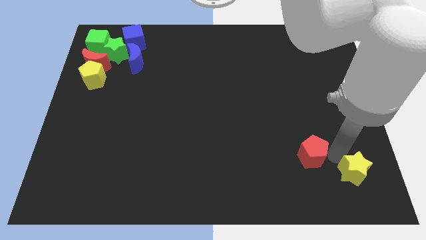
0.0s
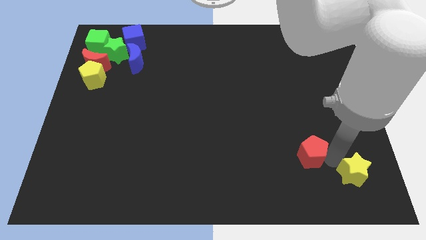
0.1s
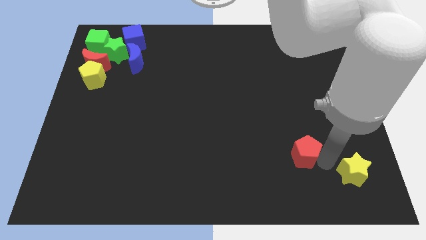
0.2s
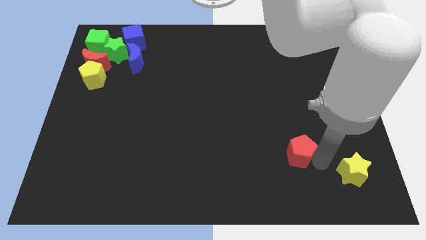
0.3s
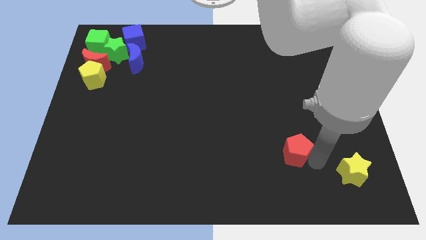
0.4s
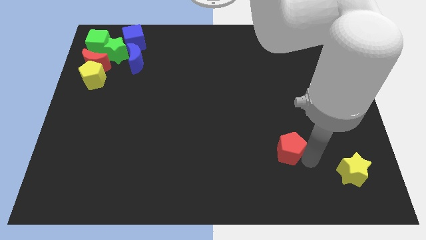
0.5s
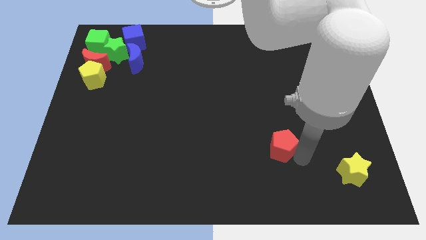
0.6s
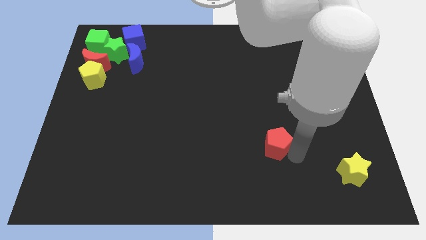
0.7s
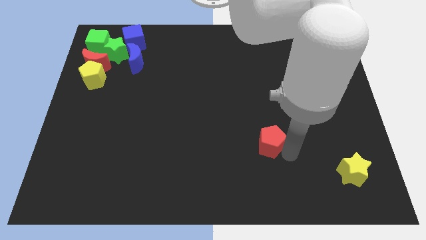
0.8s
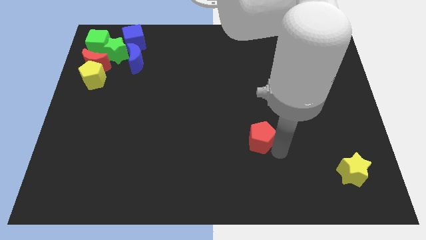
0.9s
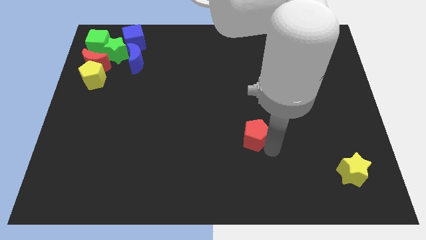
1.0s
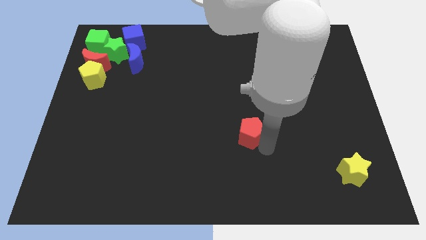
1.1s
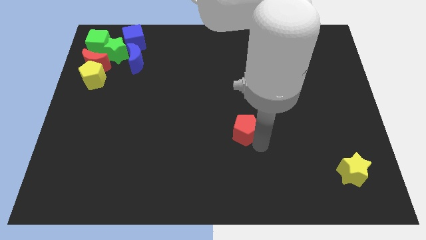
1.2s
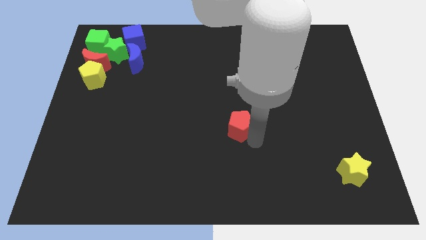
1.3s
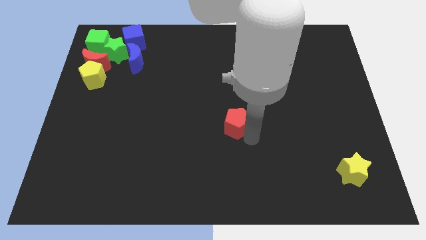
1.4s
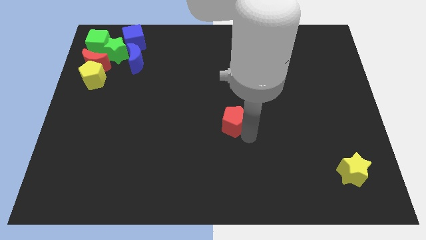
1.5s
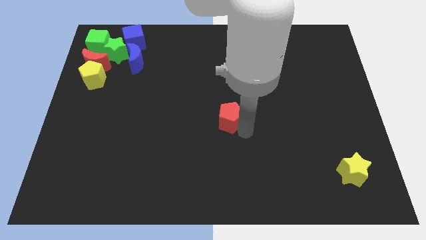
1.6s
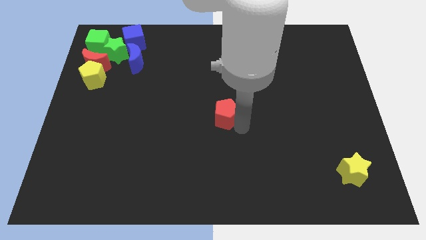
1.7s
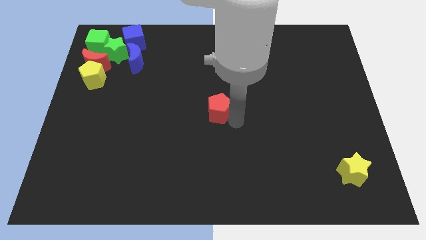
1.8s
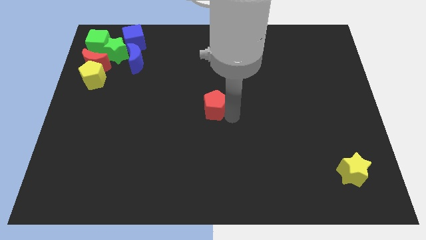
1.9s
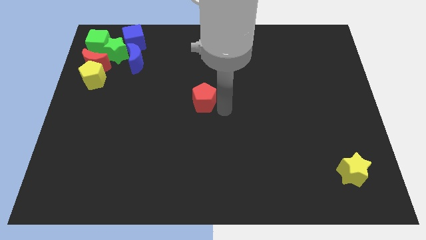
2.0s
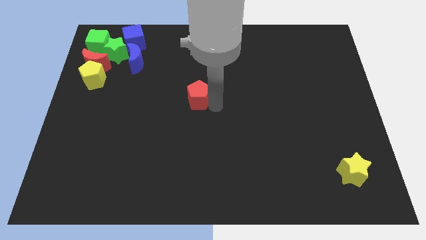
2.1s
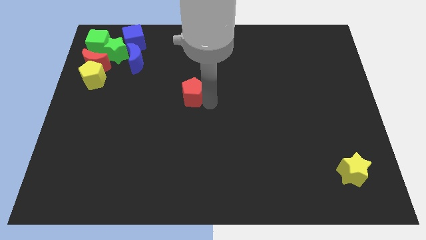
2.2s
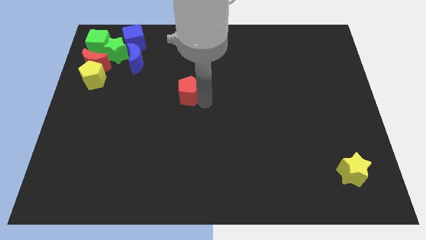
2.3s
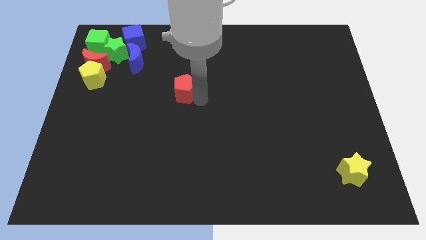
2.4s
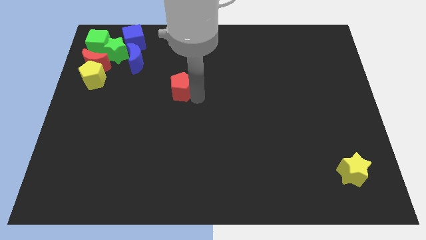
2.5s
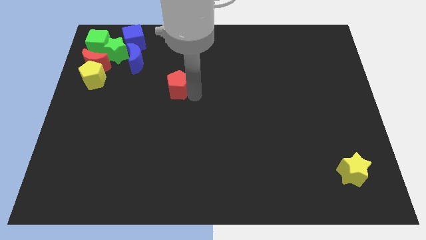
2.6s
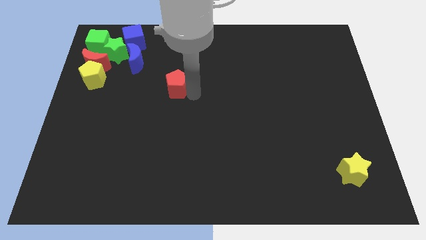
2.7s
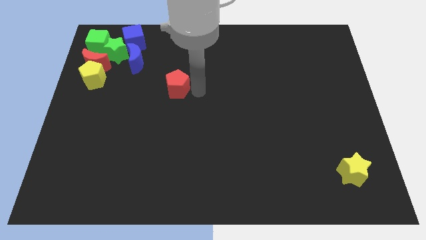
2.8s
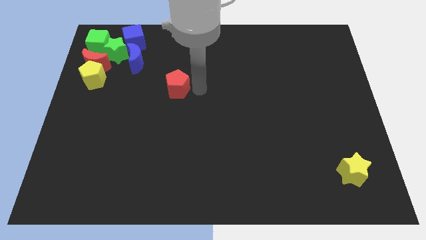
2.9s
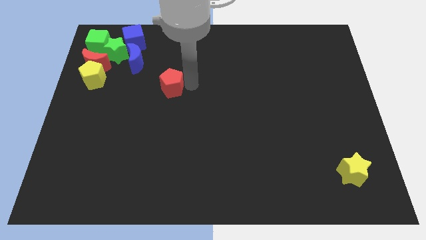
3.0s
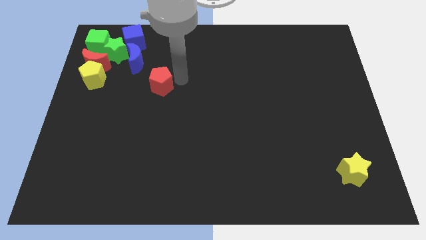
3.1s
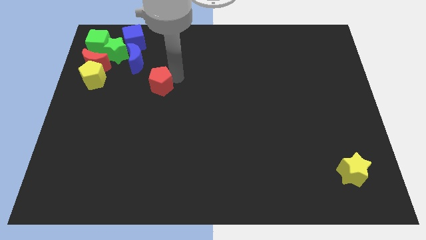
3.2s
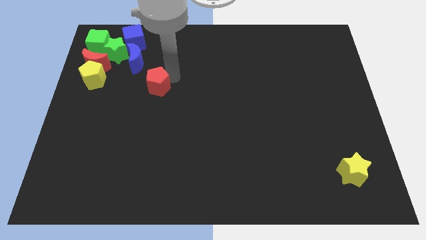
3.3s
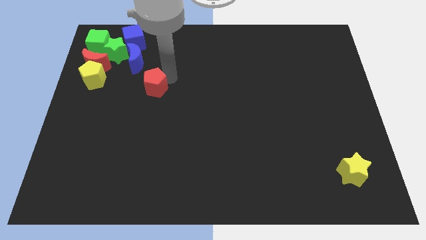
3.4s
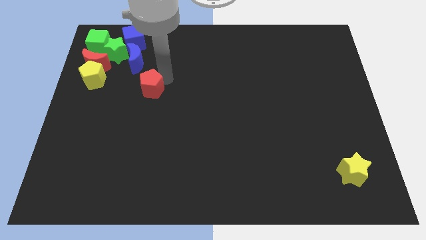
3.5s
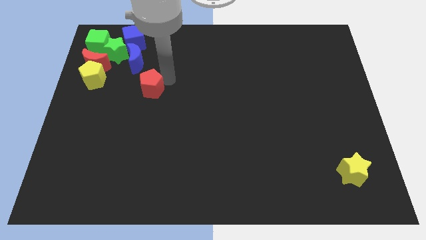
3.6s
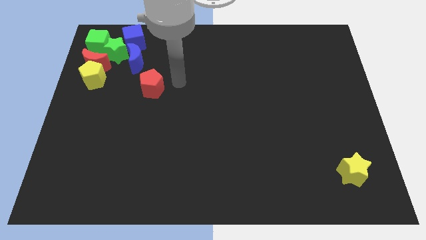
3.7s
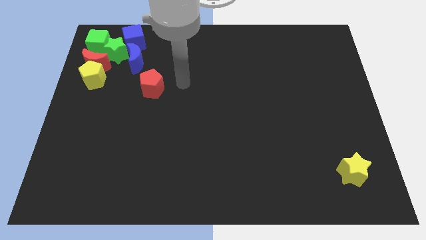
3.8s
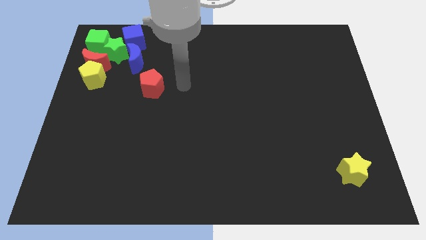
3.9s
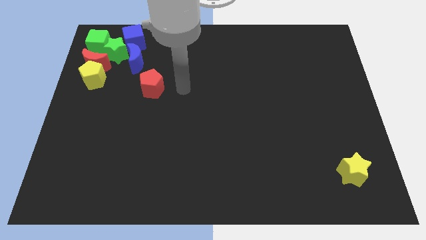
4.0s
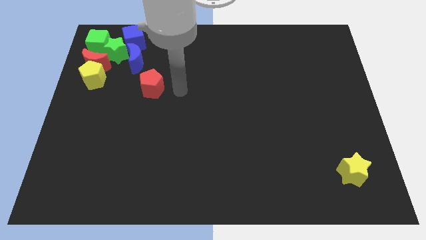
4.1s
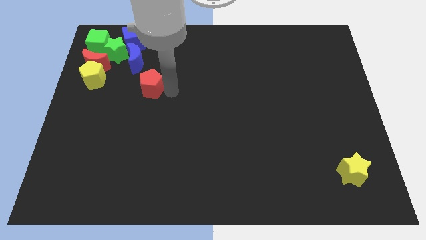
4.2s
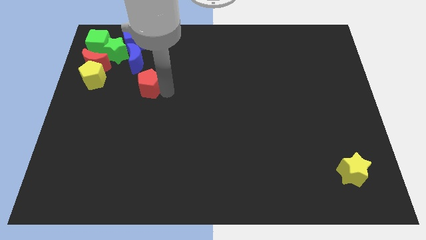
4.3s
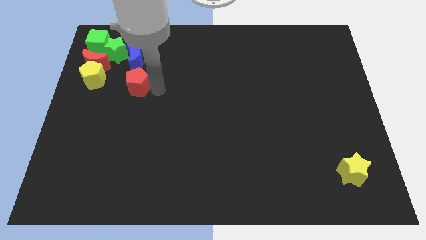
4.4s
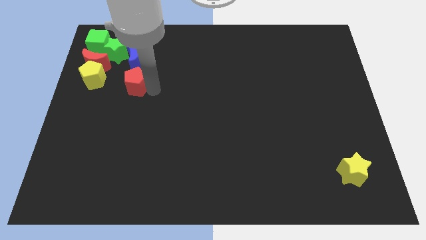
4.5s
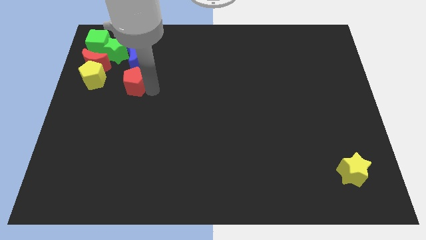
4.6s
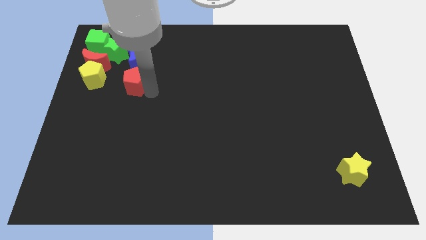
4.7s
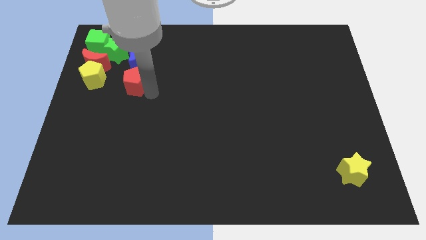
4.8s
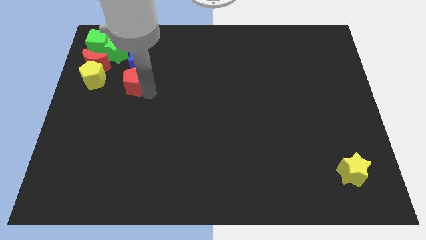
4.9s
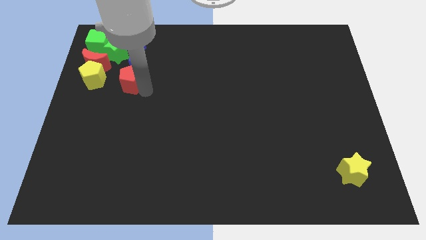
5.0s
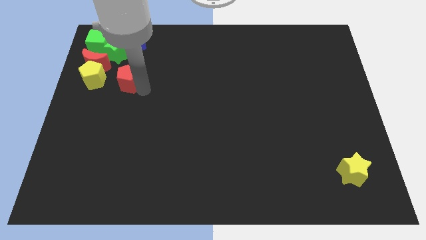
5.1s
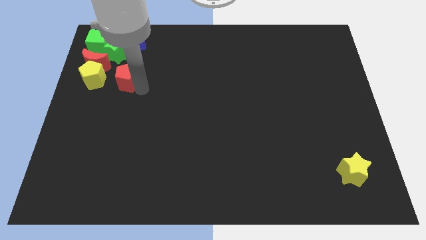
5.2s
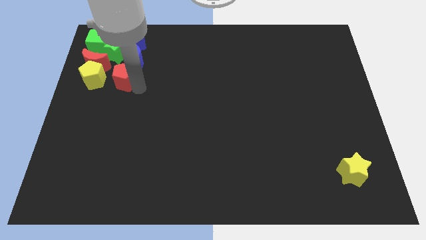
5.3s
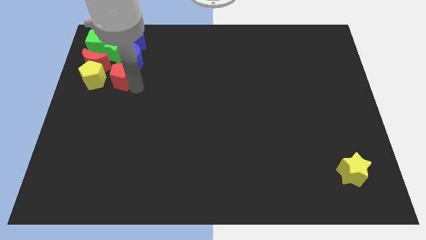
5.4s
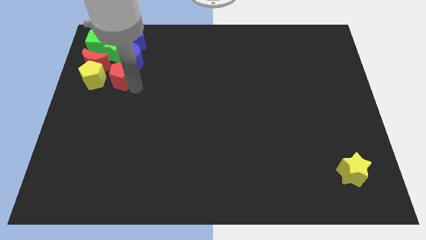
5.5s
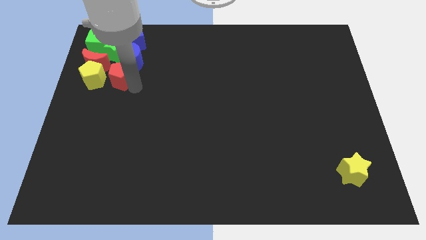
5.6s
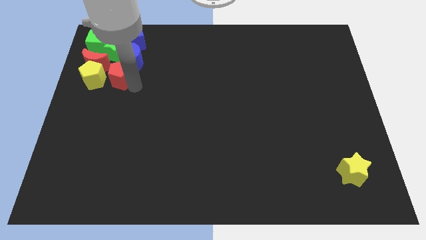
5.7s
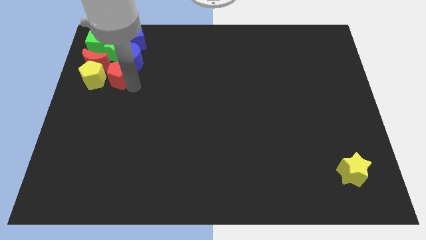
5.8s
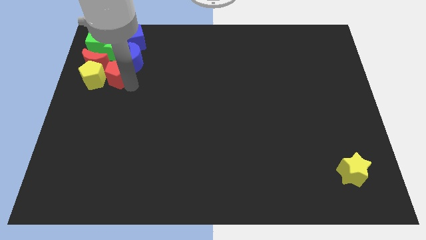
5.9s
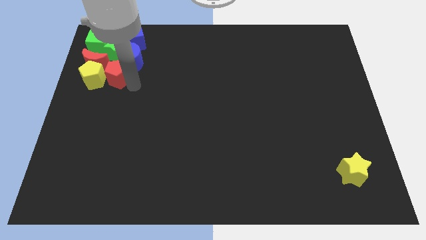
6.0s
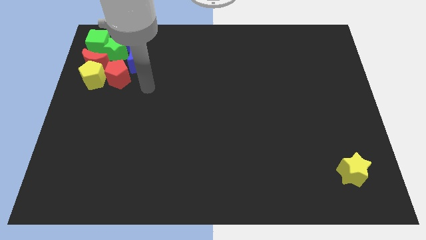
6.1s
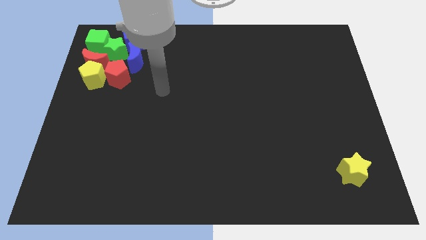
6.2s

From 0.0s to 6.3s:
move the red pentagon to the right of the yellow pentagon

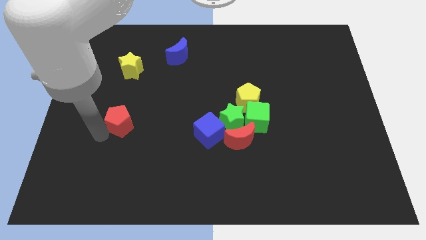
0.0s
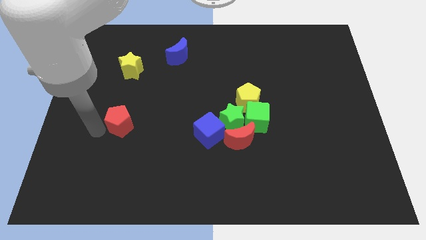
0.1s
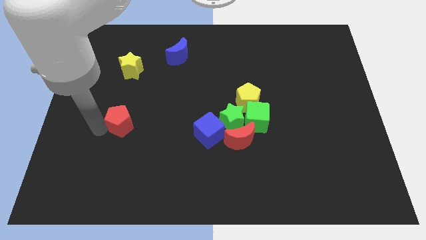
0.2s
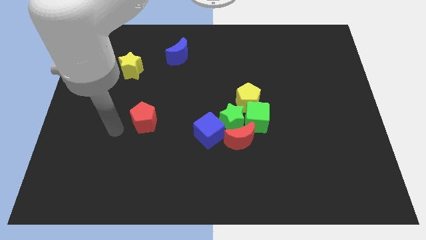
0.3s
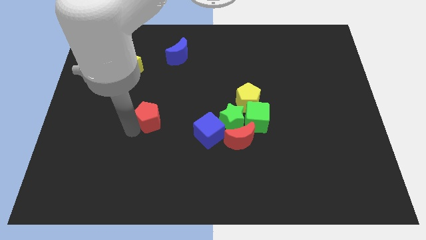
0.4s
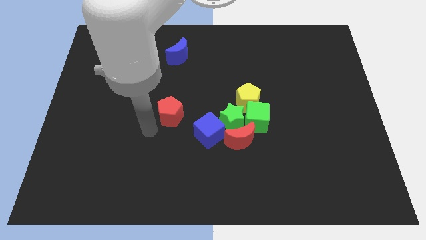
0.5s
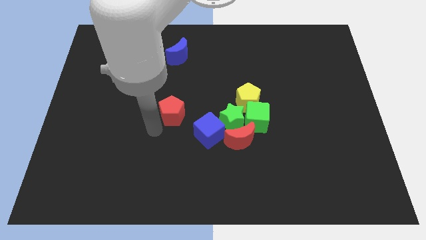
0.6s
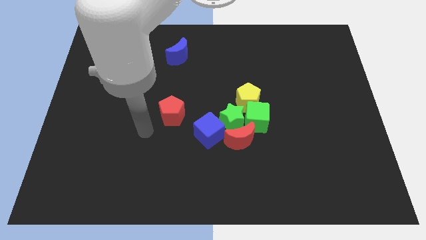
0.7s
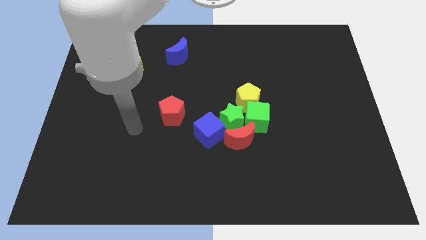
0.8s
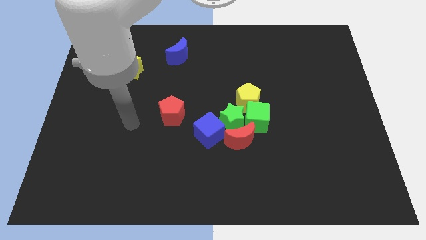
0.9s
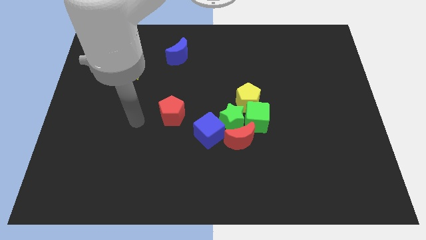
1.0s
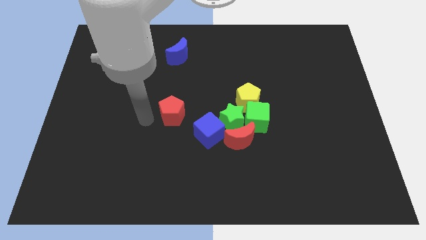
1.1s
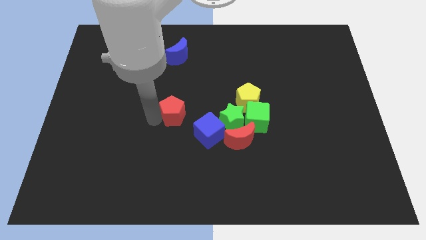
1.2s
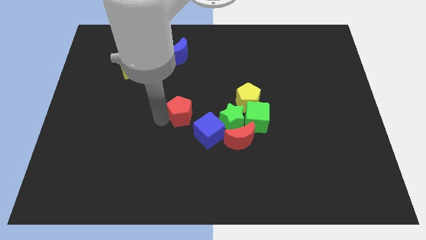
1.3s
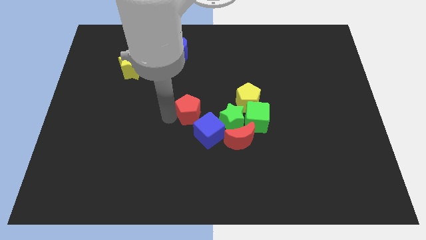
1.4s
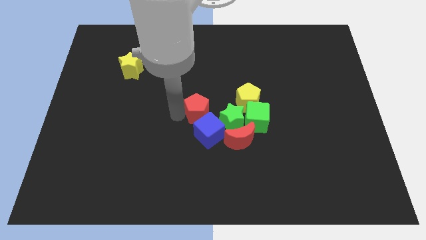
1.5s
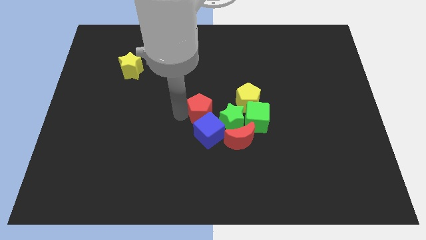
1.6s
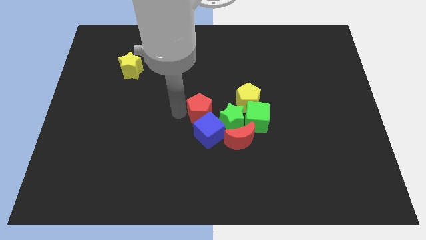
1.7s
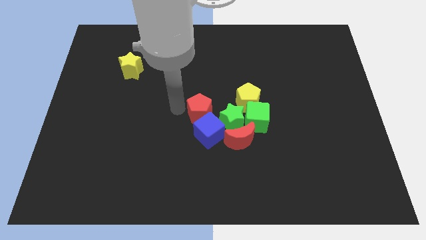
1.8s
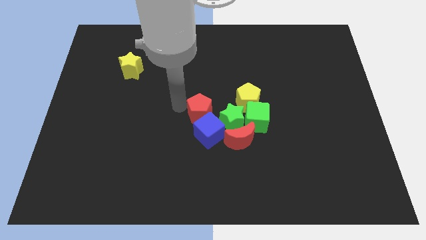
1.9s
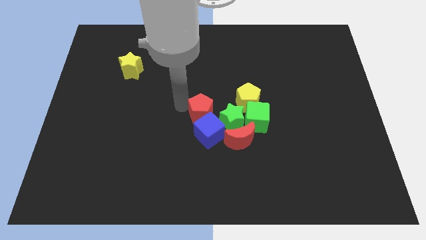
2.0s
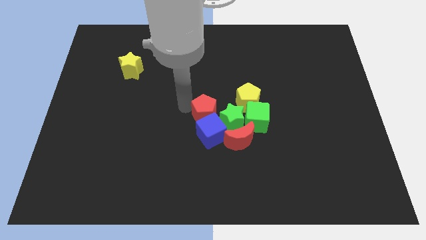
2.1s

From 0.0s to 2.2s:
place the red pentagon into the blue cube

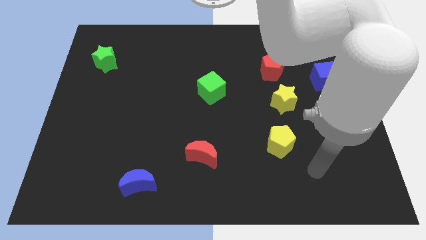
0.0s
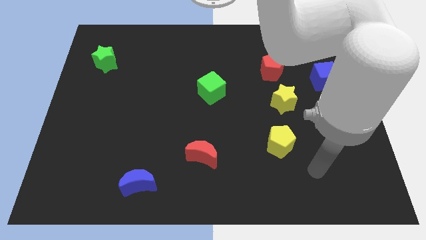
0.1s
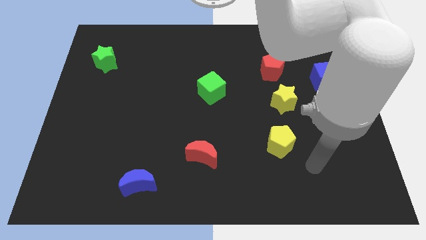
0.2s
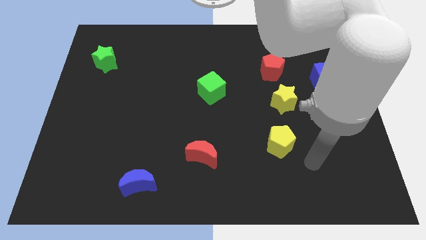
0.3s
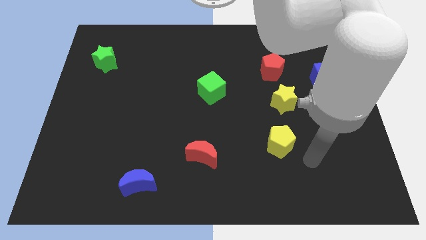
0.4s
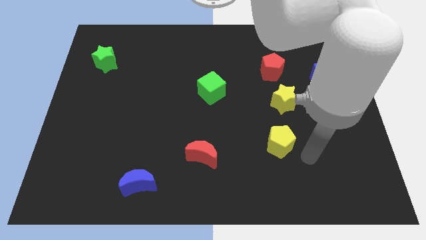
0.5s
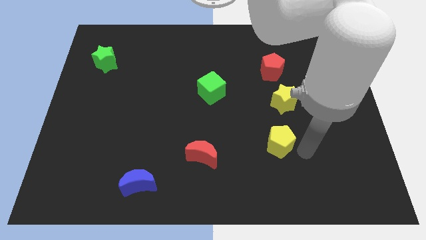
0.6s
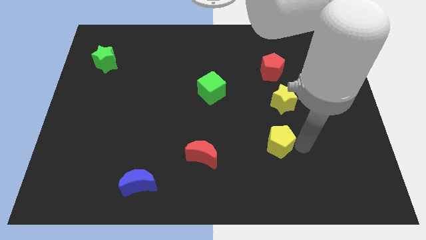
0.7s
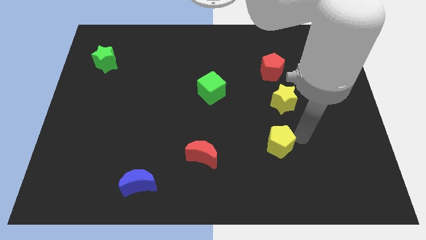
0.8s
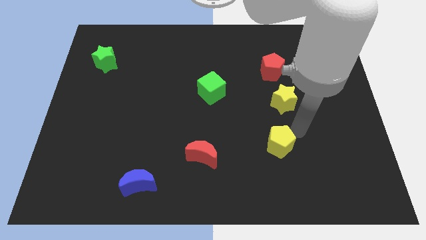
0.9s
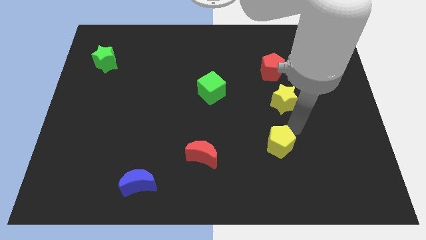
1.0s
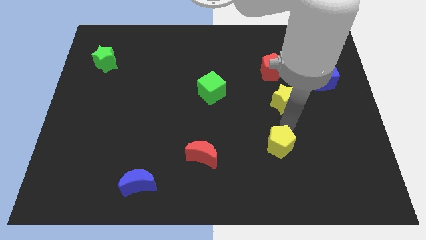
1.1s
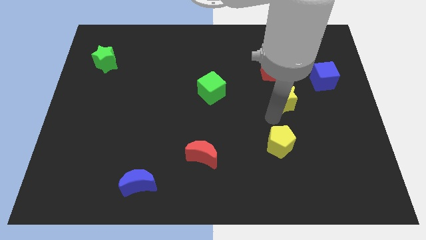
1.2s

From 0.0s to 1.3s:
point your arm at the top of the yellow pentagon
